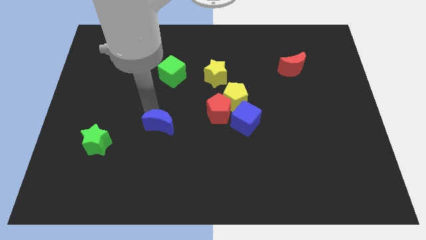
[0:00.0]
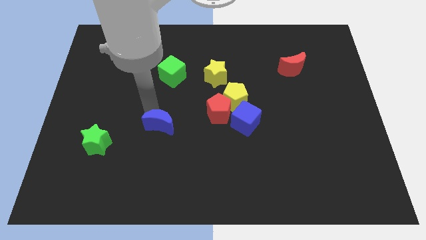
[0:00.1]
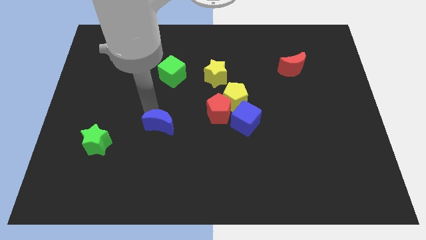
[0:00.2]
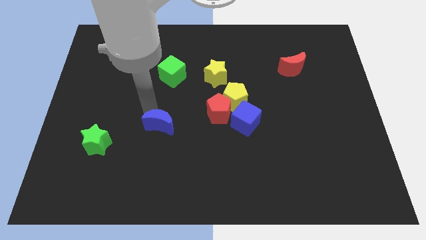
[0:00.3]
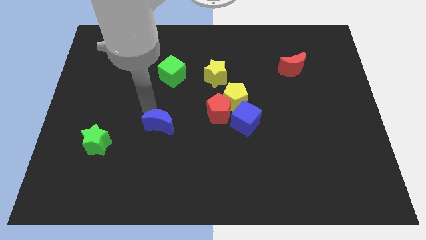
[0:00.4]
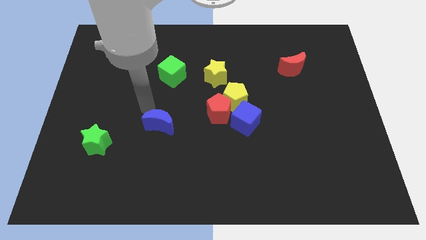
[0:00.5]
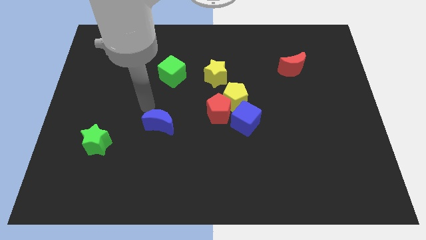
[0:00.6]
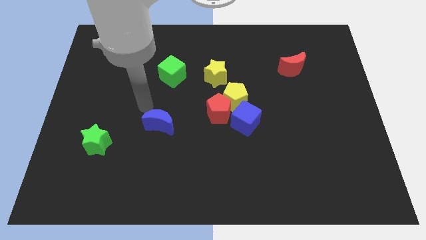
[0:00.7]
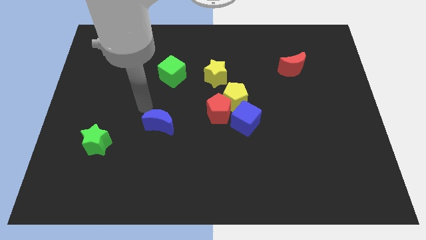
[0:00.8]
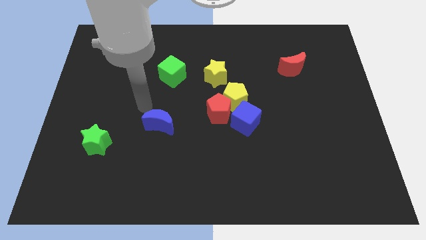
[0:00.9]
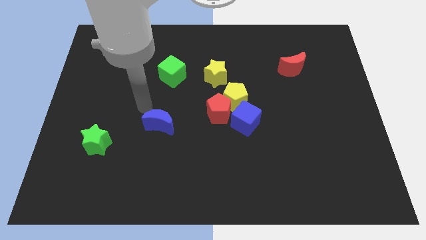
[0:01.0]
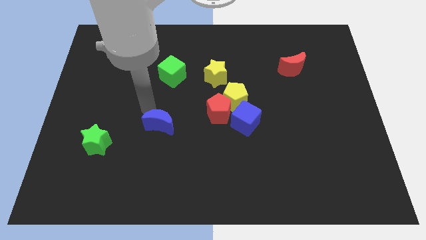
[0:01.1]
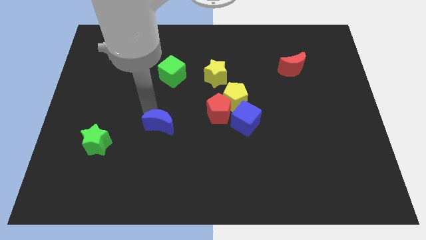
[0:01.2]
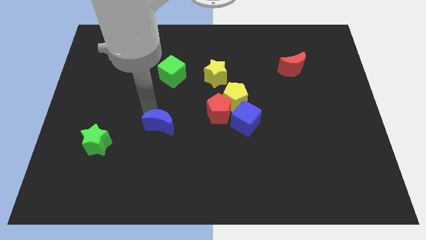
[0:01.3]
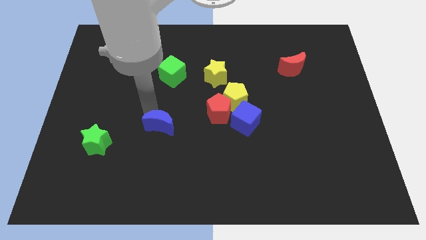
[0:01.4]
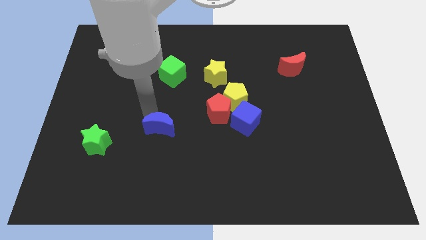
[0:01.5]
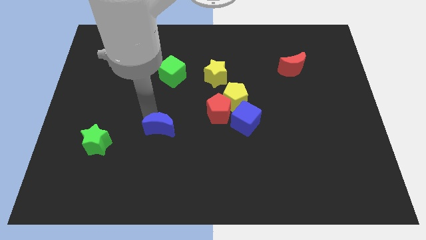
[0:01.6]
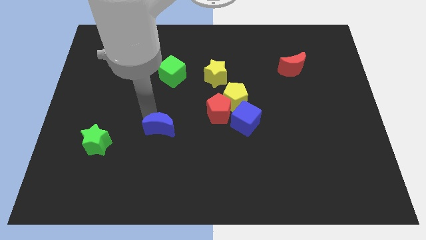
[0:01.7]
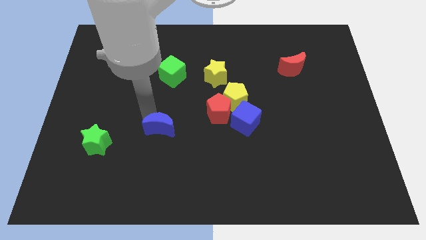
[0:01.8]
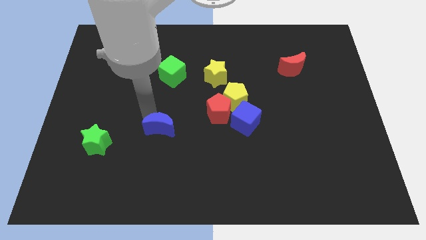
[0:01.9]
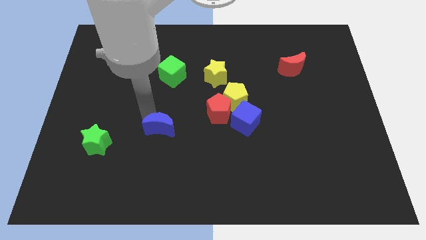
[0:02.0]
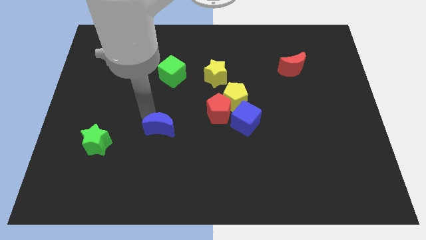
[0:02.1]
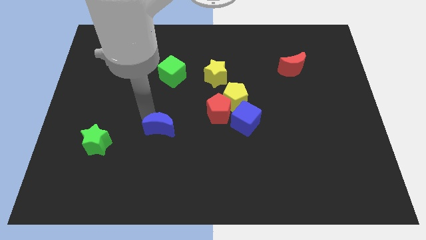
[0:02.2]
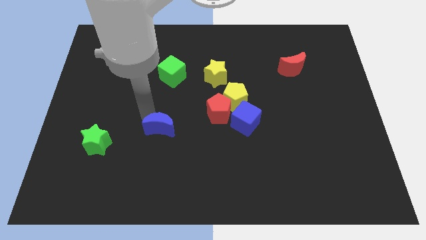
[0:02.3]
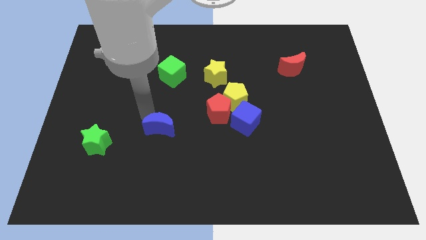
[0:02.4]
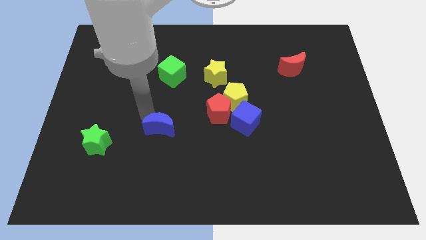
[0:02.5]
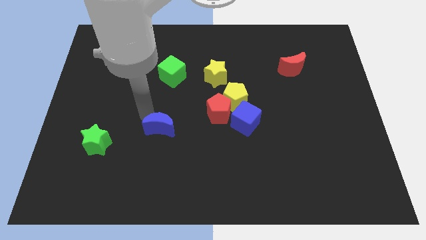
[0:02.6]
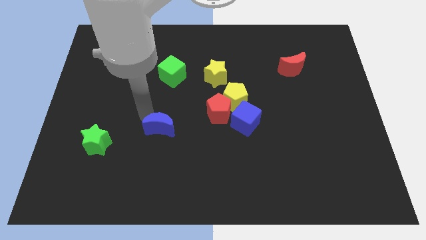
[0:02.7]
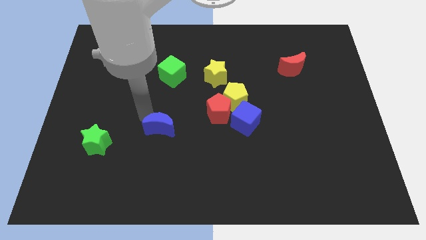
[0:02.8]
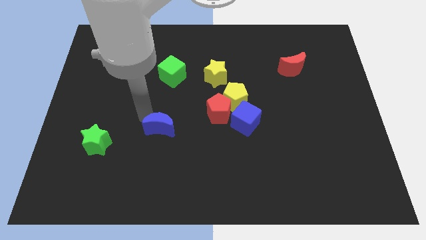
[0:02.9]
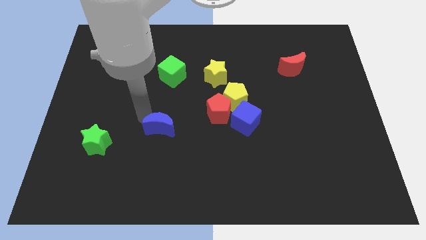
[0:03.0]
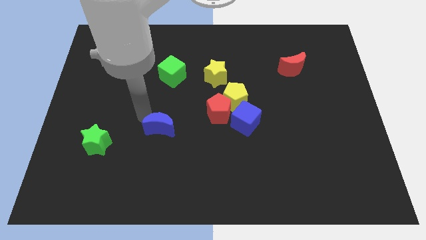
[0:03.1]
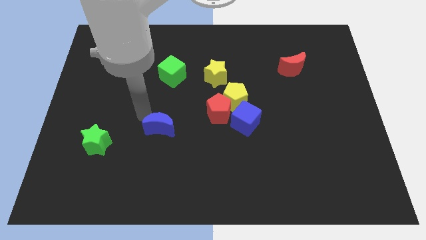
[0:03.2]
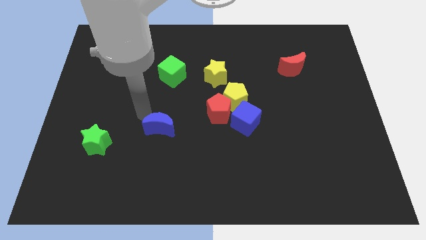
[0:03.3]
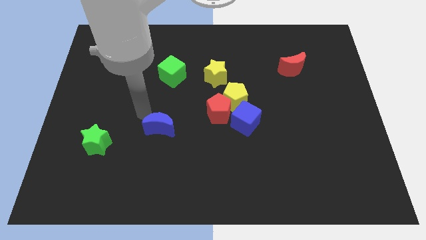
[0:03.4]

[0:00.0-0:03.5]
slightly move the blue crescent towards bottom

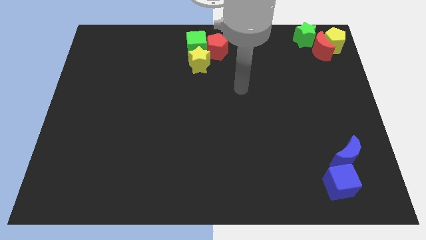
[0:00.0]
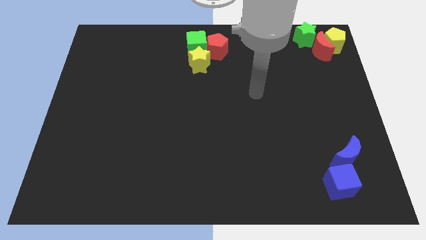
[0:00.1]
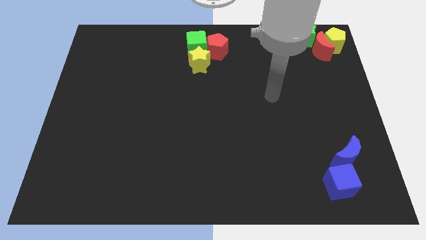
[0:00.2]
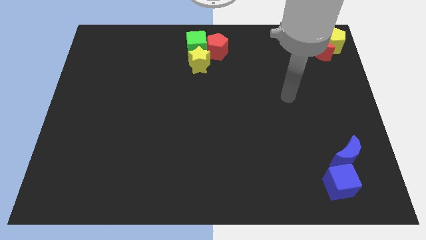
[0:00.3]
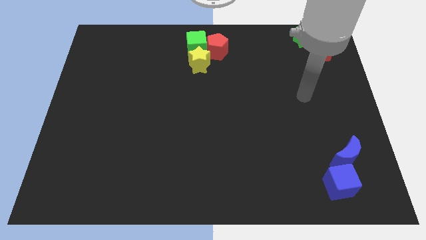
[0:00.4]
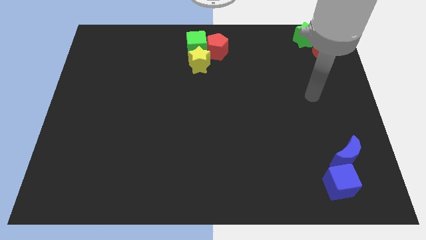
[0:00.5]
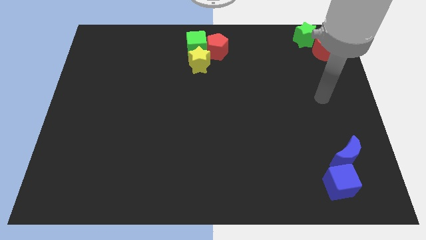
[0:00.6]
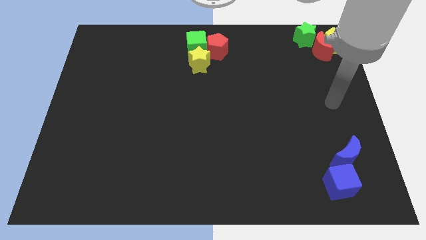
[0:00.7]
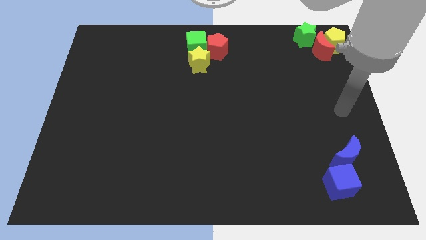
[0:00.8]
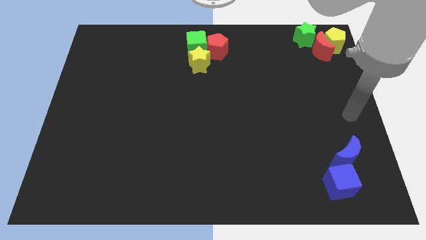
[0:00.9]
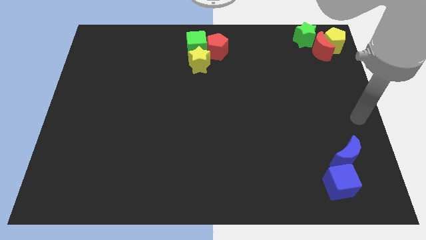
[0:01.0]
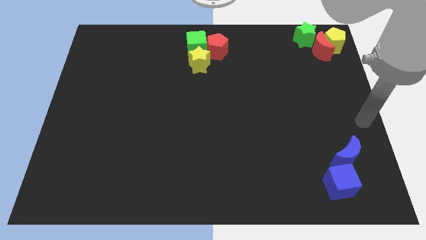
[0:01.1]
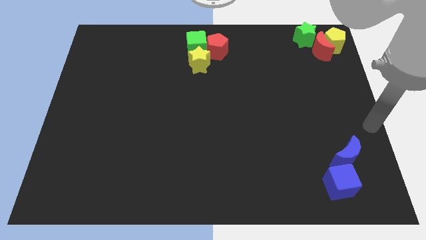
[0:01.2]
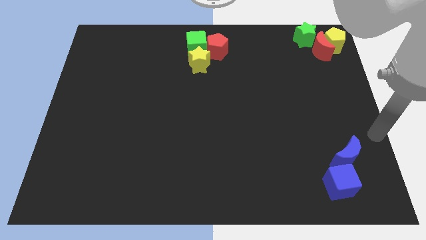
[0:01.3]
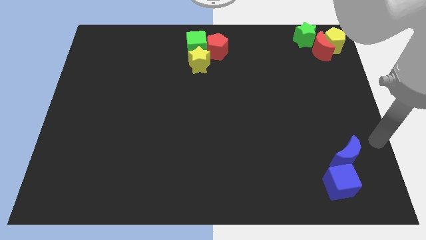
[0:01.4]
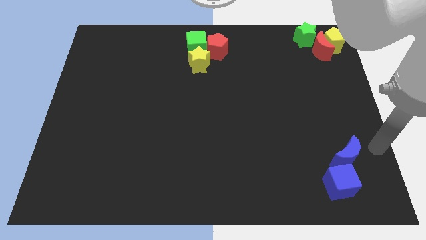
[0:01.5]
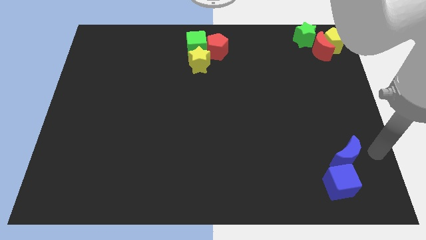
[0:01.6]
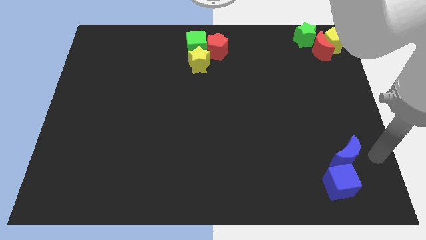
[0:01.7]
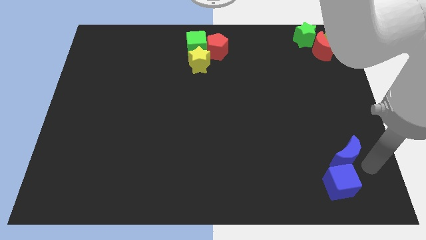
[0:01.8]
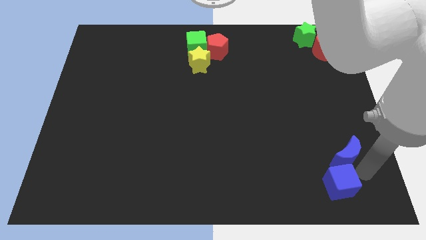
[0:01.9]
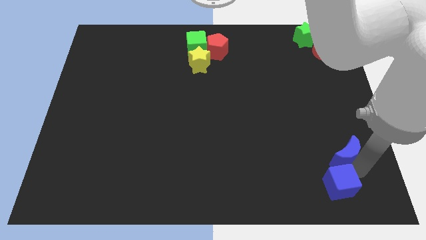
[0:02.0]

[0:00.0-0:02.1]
slightly tap the blue crescent

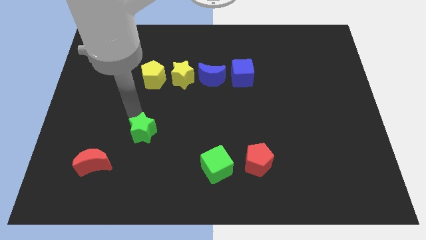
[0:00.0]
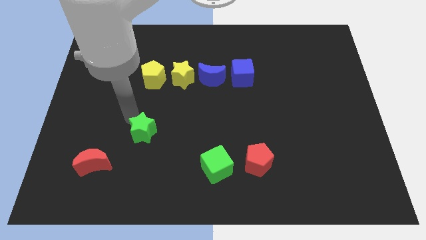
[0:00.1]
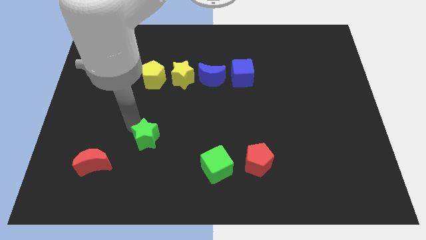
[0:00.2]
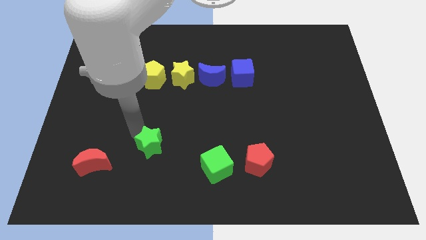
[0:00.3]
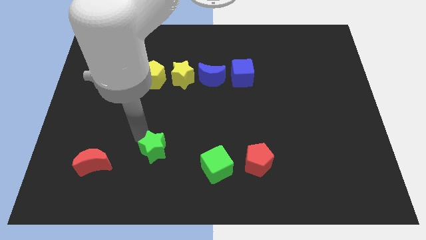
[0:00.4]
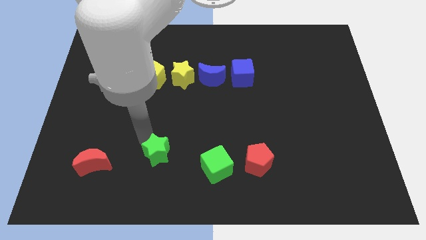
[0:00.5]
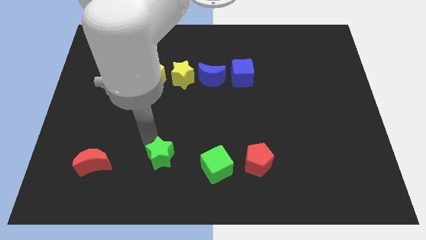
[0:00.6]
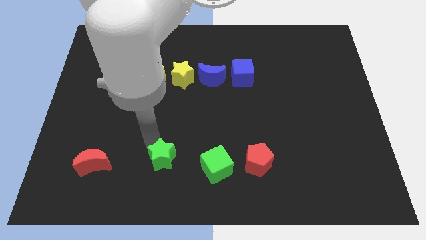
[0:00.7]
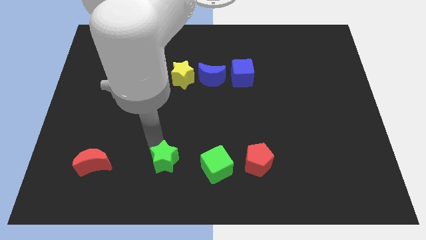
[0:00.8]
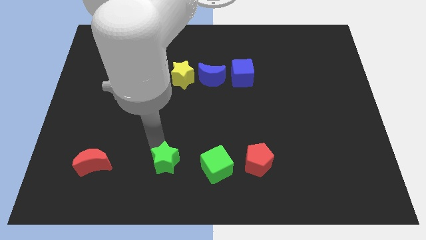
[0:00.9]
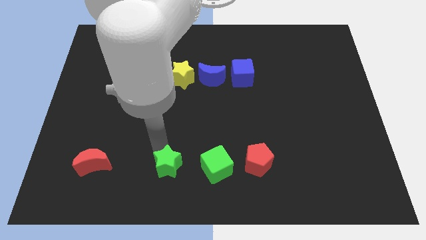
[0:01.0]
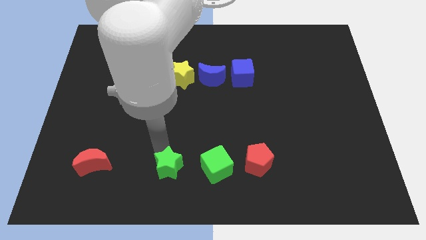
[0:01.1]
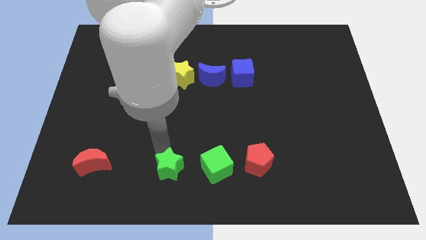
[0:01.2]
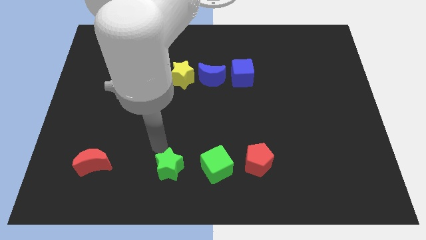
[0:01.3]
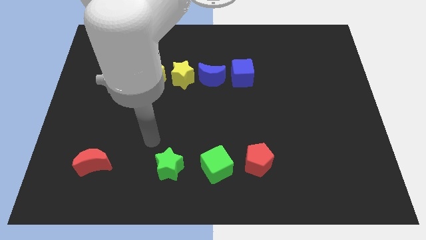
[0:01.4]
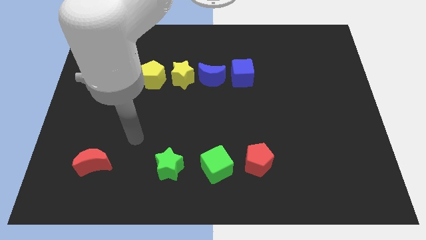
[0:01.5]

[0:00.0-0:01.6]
slide the green star to the left side of the green cube

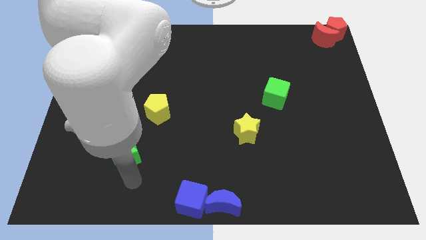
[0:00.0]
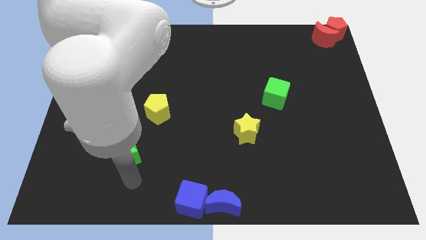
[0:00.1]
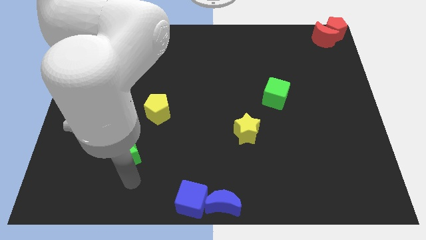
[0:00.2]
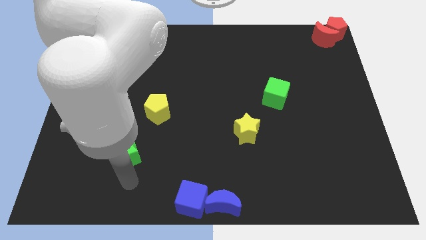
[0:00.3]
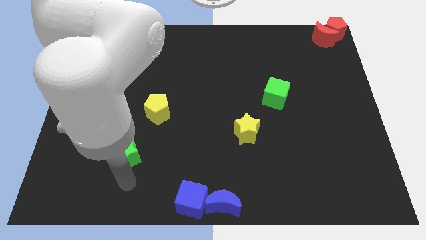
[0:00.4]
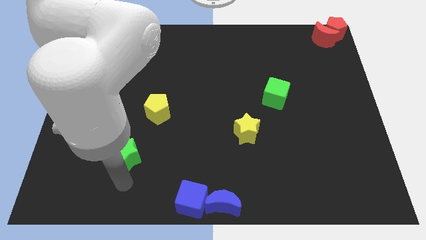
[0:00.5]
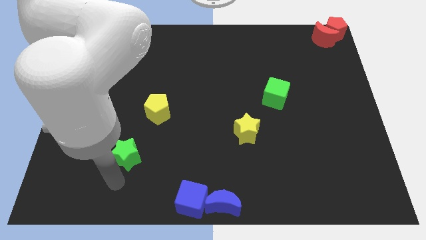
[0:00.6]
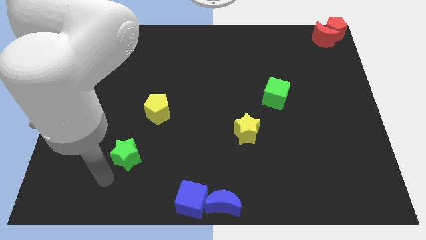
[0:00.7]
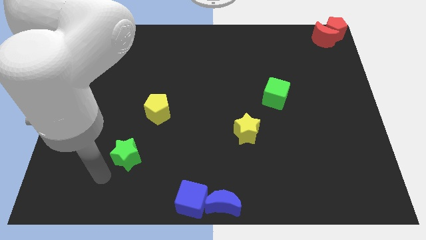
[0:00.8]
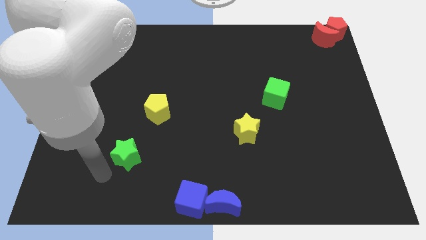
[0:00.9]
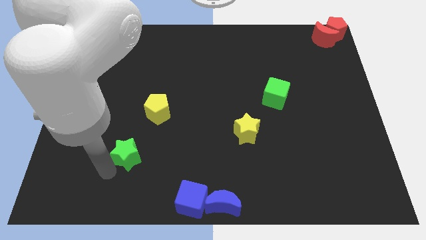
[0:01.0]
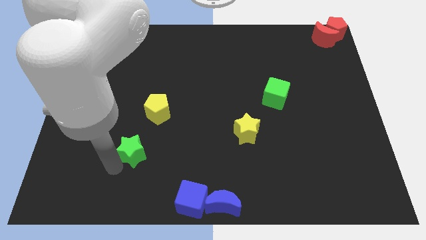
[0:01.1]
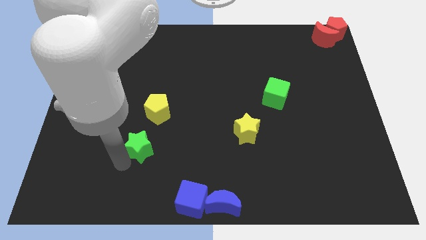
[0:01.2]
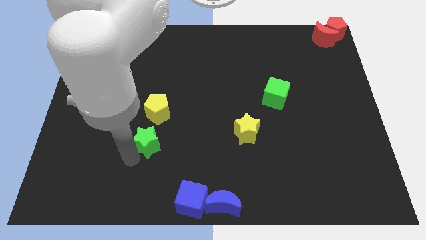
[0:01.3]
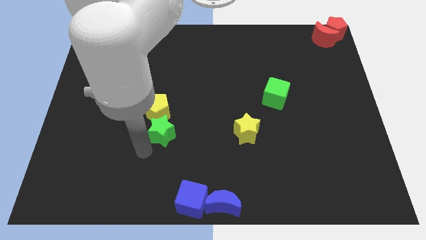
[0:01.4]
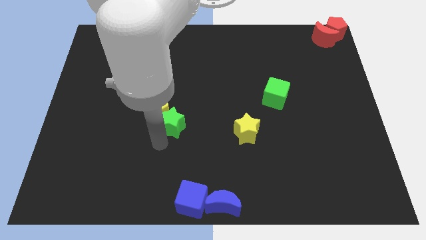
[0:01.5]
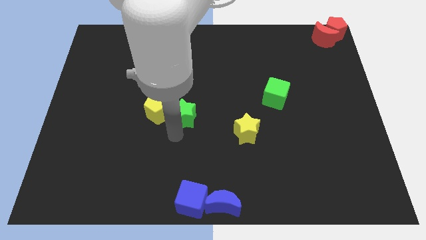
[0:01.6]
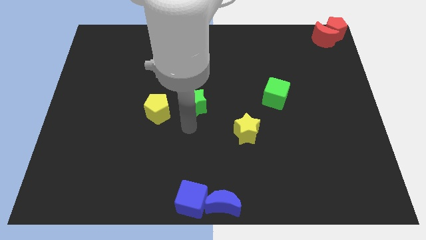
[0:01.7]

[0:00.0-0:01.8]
push the green star to the right of the yellow pentagon
